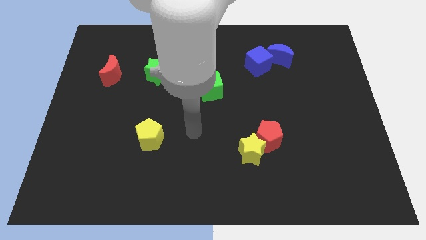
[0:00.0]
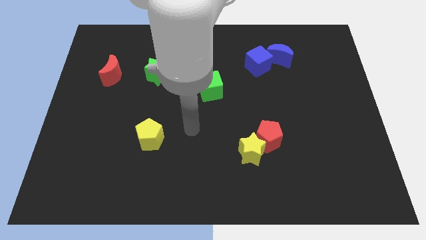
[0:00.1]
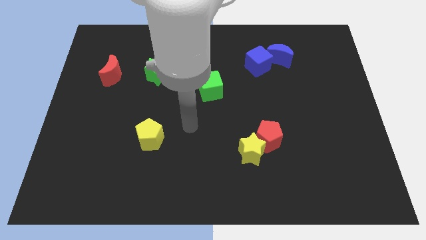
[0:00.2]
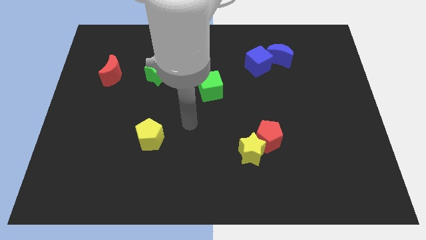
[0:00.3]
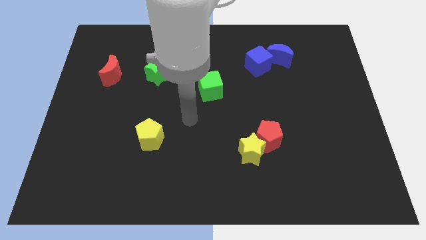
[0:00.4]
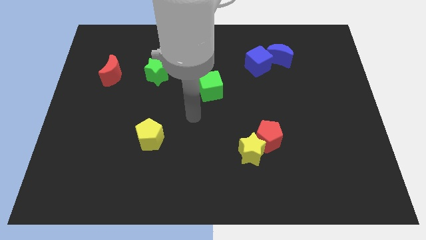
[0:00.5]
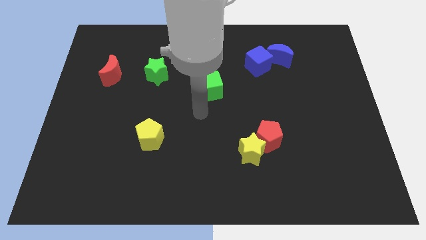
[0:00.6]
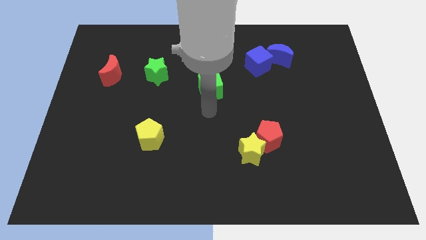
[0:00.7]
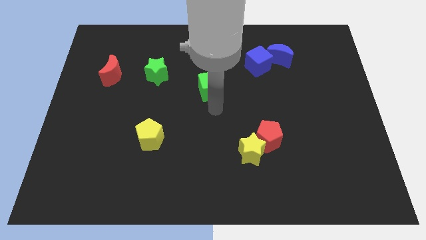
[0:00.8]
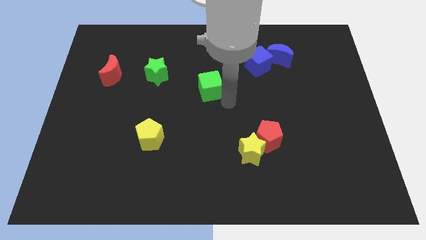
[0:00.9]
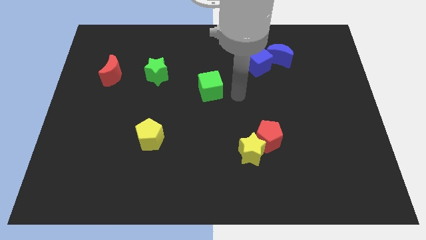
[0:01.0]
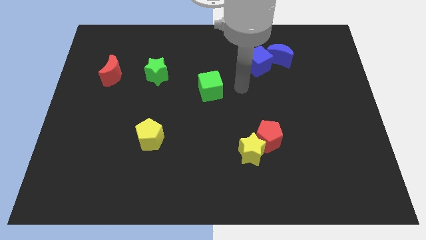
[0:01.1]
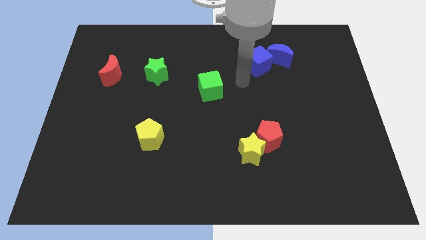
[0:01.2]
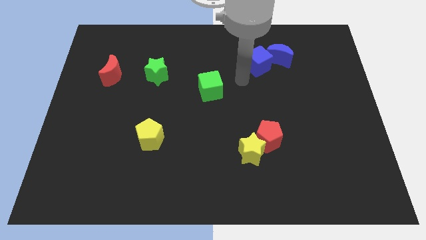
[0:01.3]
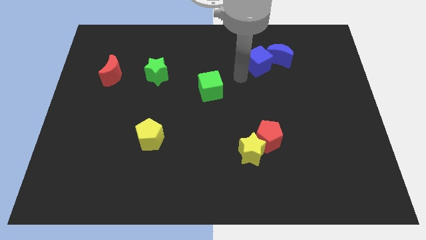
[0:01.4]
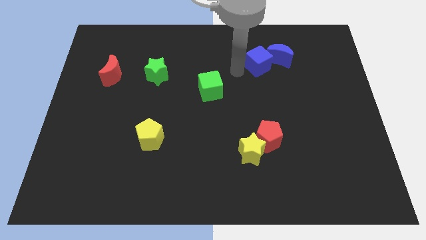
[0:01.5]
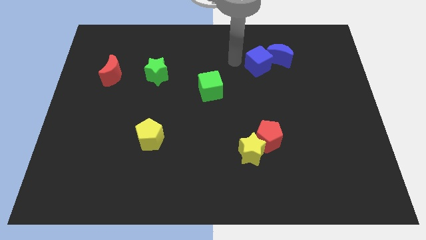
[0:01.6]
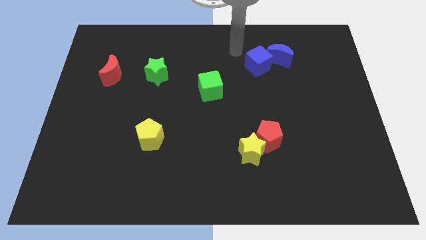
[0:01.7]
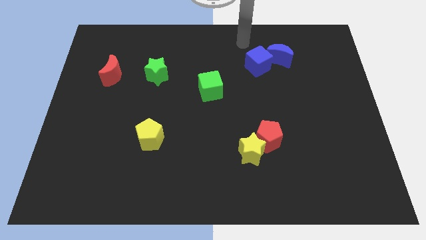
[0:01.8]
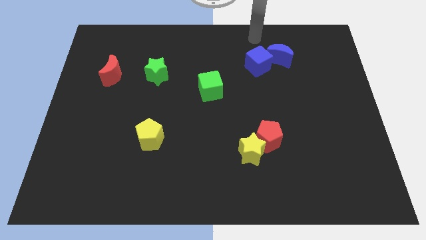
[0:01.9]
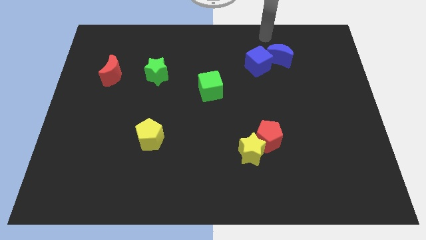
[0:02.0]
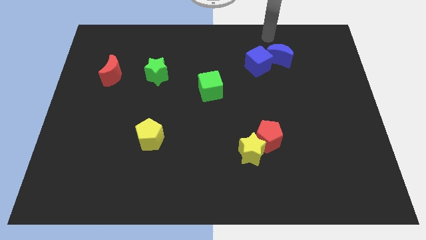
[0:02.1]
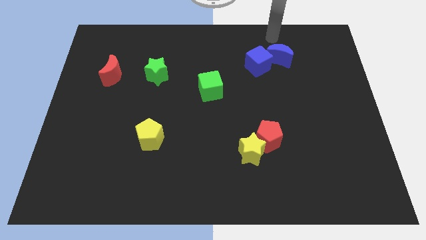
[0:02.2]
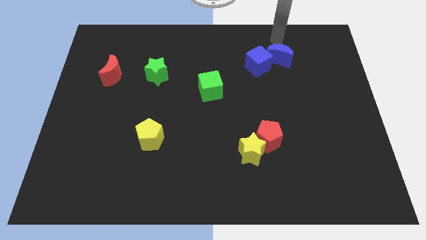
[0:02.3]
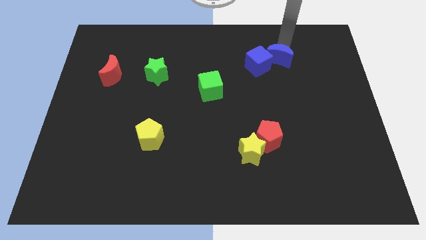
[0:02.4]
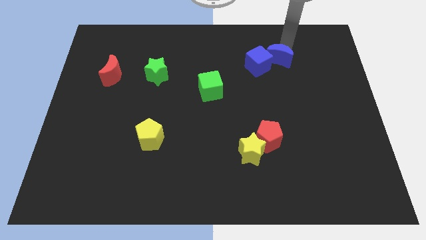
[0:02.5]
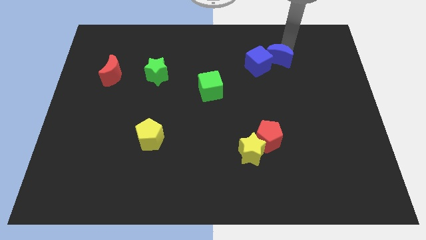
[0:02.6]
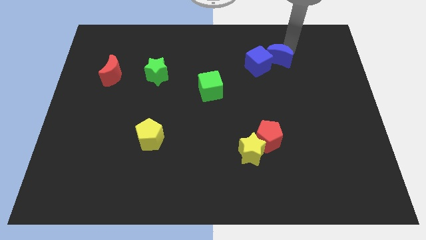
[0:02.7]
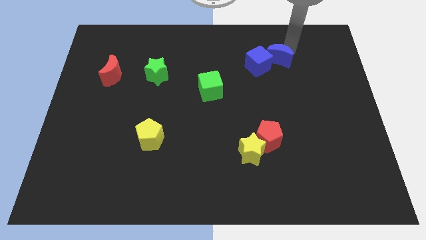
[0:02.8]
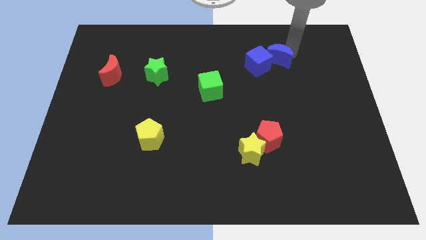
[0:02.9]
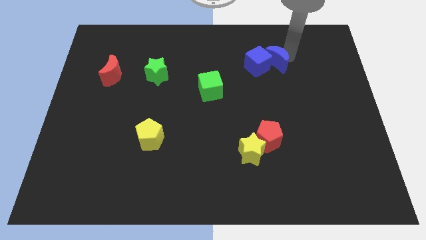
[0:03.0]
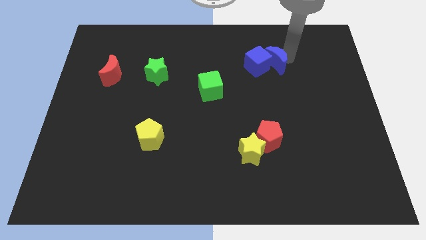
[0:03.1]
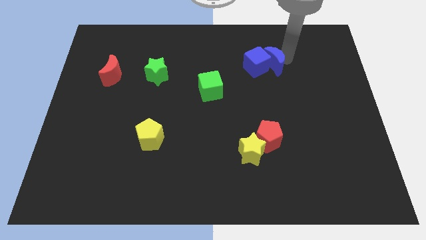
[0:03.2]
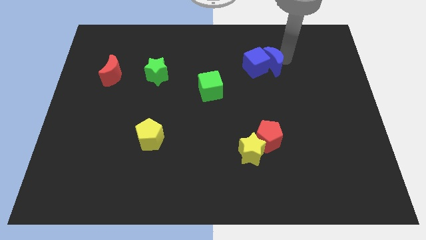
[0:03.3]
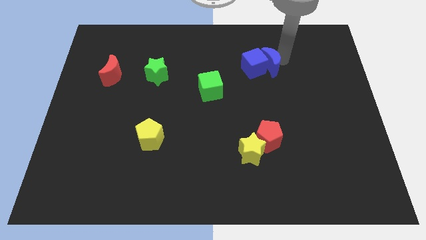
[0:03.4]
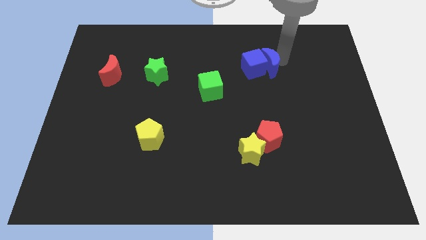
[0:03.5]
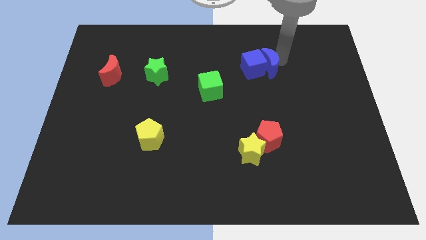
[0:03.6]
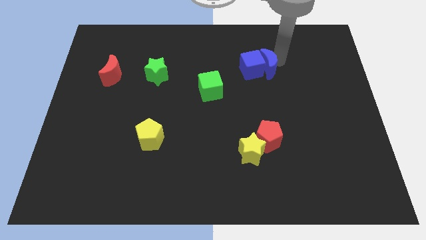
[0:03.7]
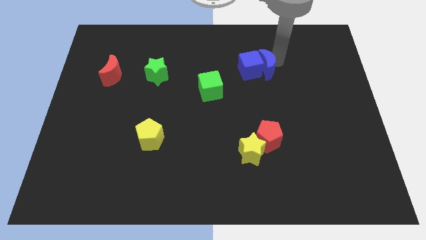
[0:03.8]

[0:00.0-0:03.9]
move the blue crescent to the right of the blue cube

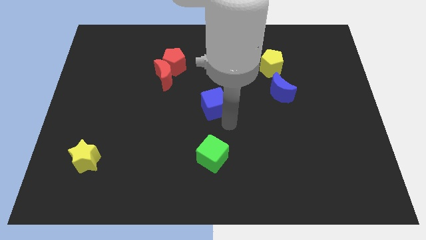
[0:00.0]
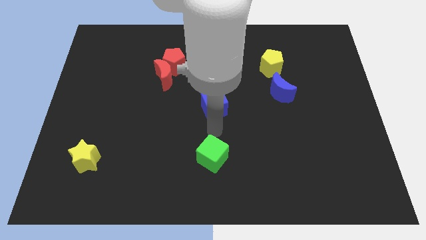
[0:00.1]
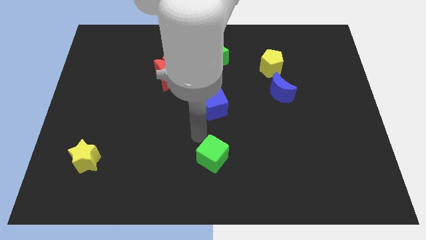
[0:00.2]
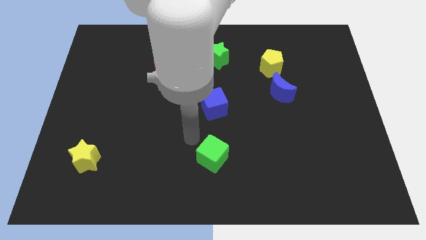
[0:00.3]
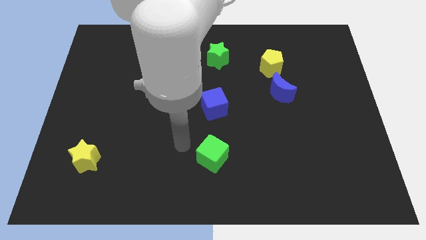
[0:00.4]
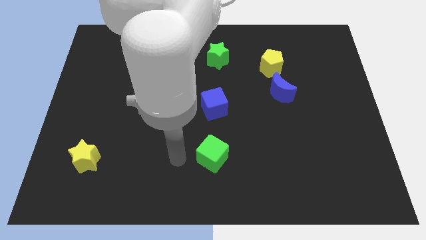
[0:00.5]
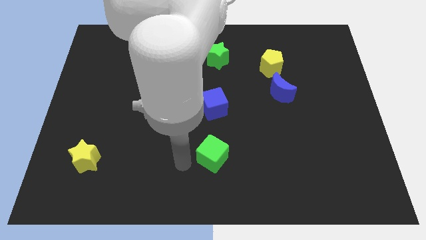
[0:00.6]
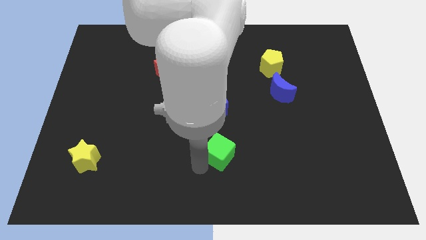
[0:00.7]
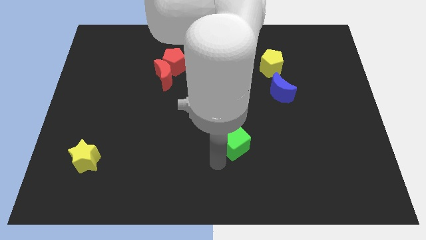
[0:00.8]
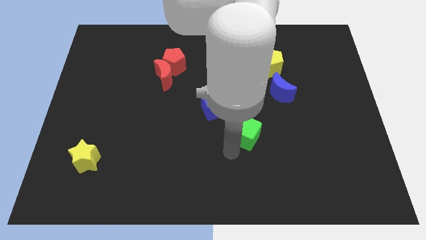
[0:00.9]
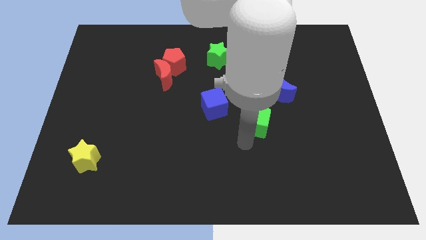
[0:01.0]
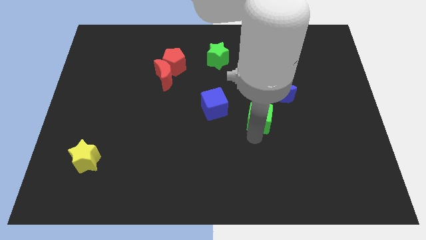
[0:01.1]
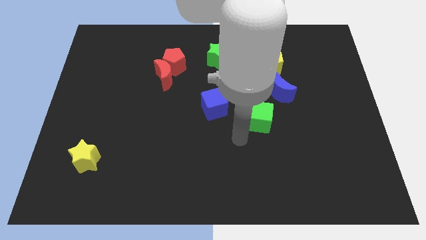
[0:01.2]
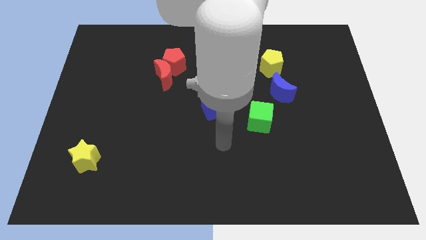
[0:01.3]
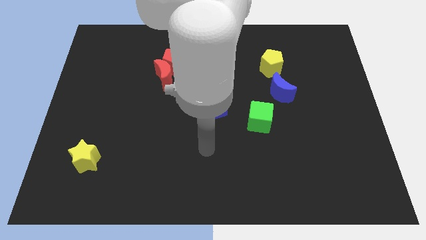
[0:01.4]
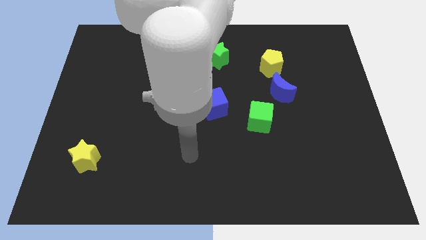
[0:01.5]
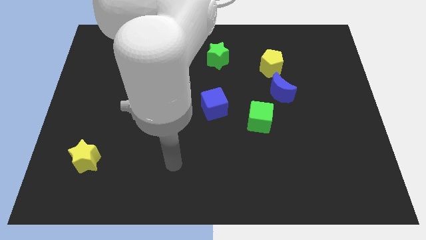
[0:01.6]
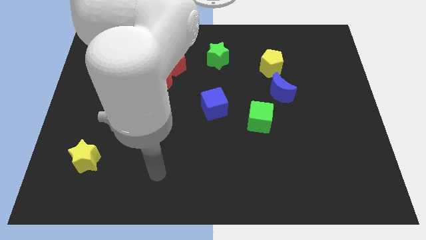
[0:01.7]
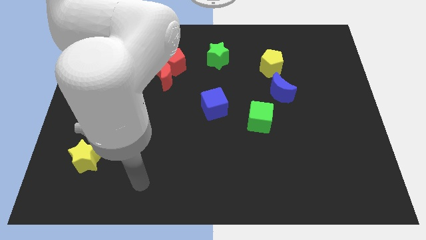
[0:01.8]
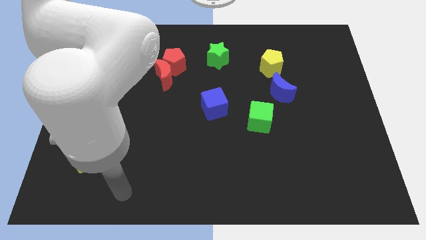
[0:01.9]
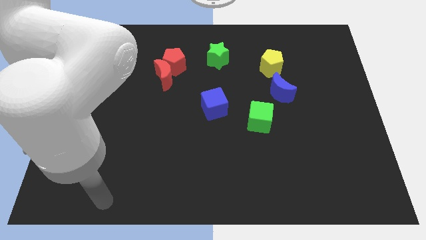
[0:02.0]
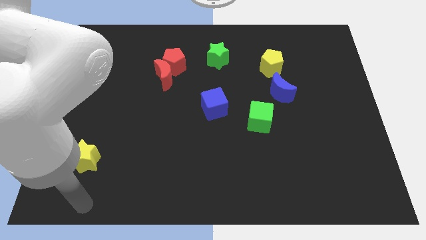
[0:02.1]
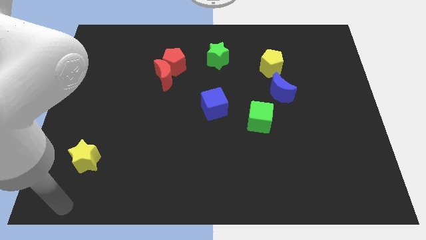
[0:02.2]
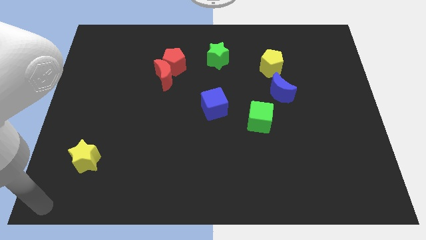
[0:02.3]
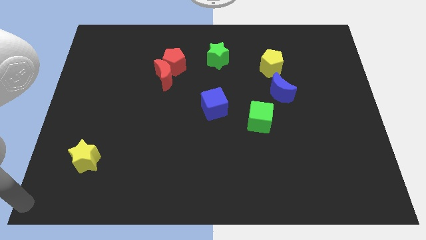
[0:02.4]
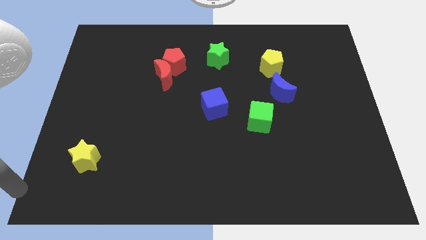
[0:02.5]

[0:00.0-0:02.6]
place the arm to the bottom left of the board

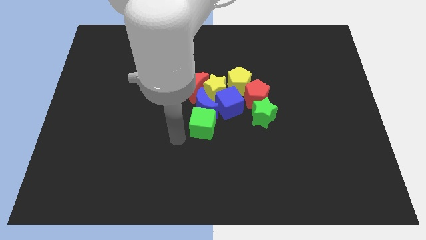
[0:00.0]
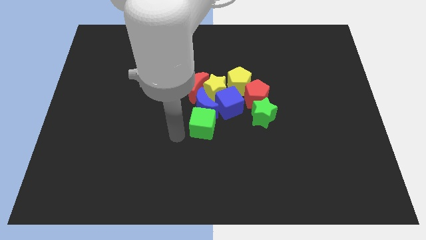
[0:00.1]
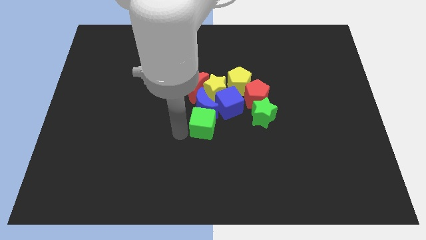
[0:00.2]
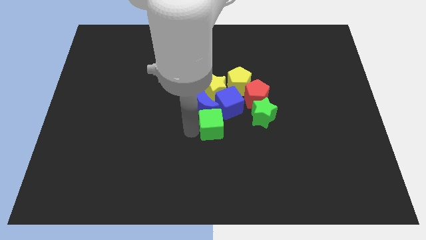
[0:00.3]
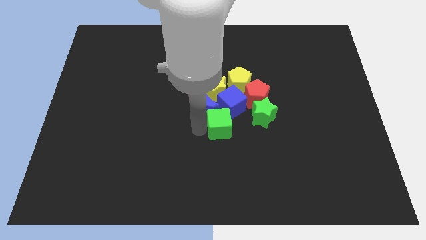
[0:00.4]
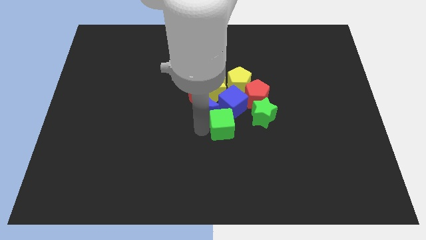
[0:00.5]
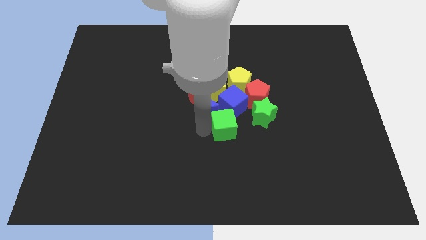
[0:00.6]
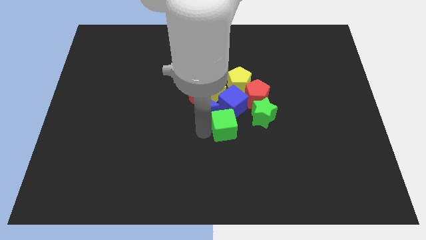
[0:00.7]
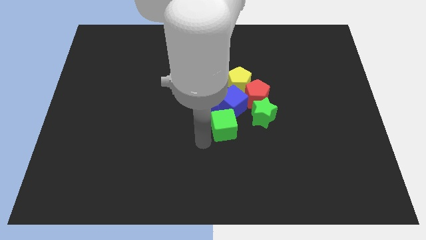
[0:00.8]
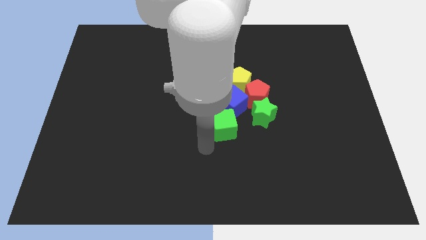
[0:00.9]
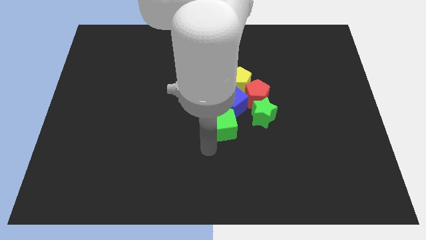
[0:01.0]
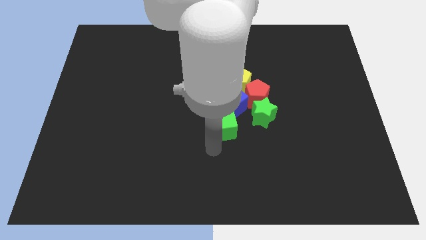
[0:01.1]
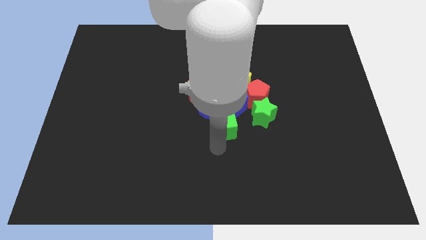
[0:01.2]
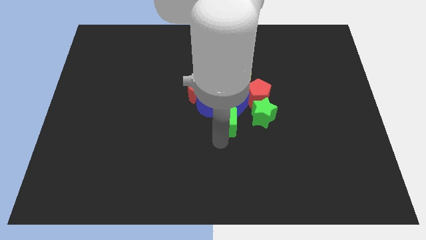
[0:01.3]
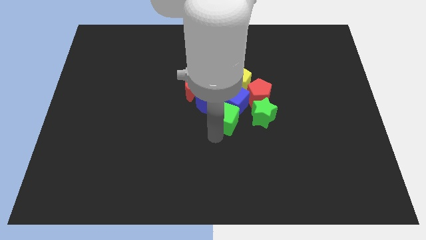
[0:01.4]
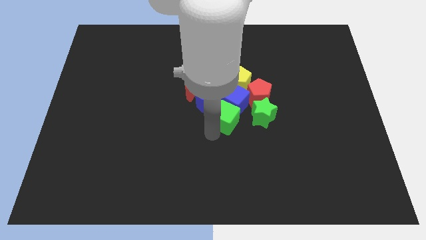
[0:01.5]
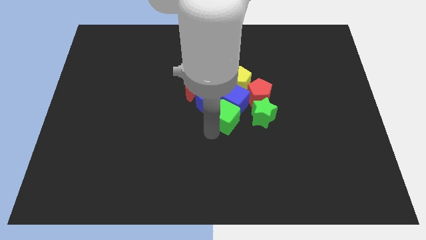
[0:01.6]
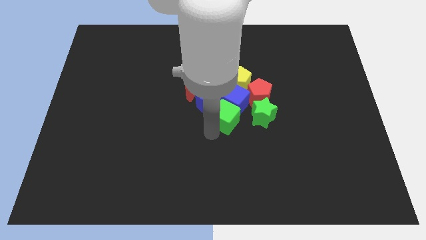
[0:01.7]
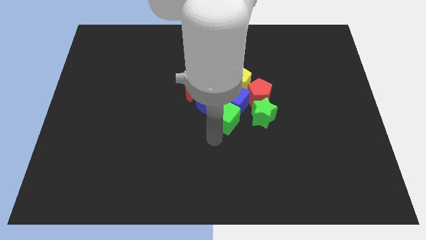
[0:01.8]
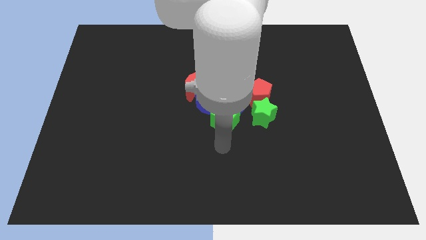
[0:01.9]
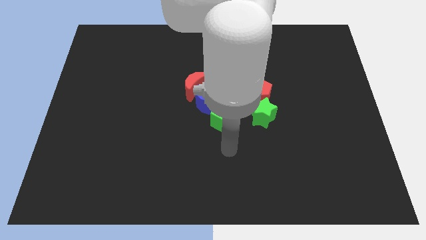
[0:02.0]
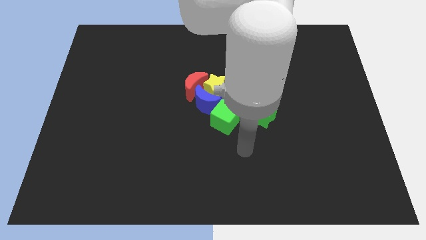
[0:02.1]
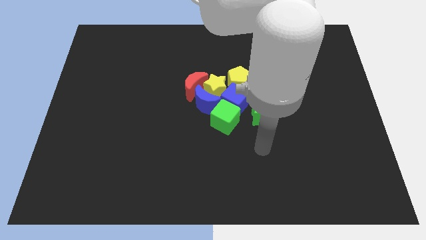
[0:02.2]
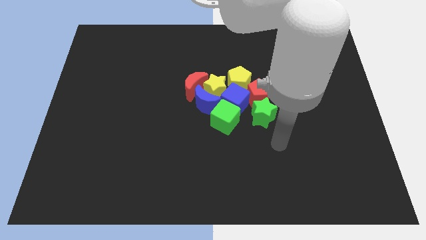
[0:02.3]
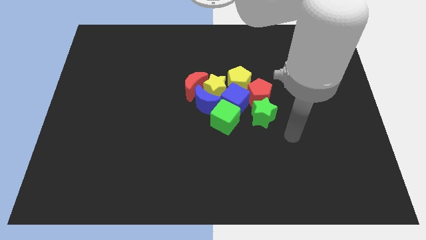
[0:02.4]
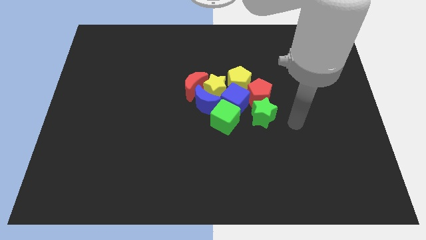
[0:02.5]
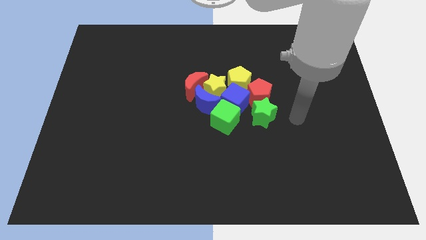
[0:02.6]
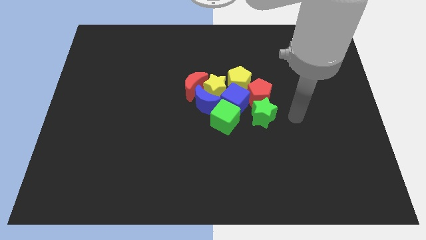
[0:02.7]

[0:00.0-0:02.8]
push the green cube into the group of blocks
